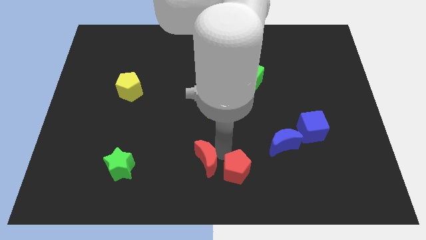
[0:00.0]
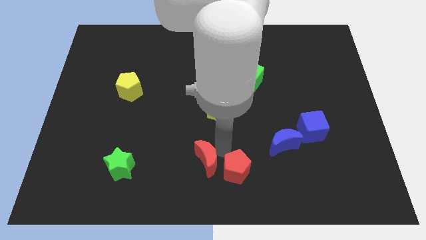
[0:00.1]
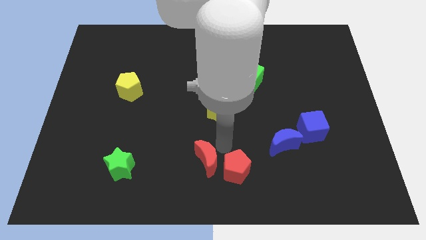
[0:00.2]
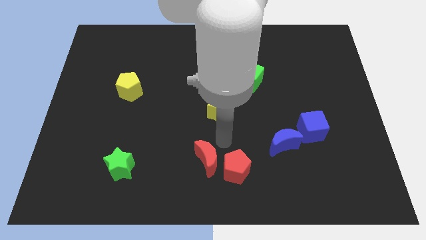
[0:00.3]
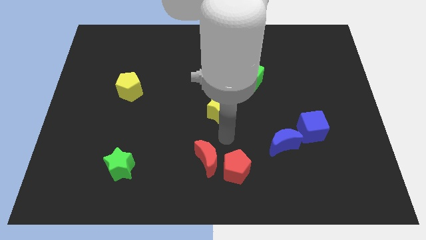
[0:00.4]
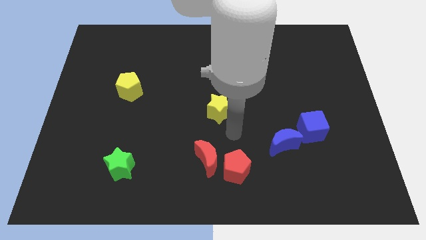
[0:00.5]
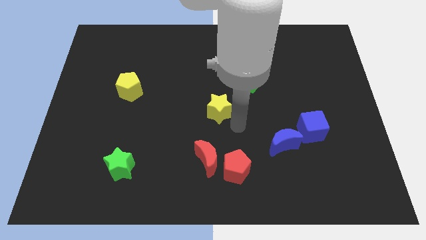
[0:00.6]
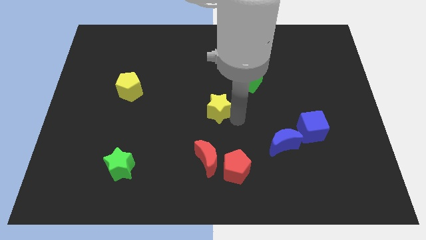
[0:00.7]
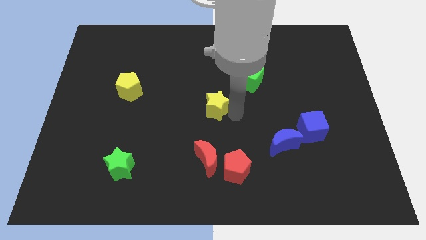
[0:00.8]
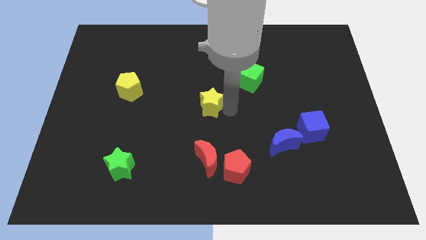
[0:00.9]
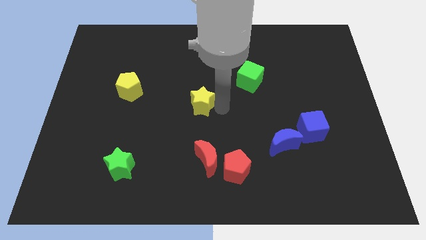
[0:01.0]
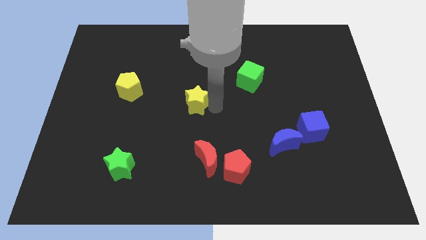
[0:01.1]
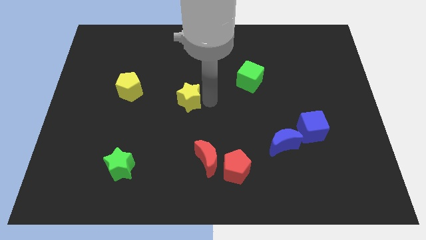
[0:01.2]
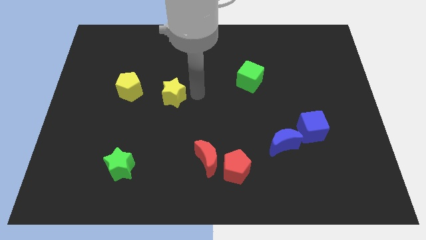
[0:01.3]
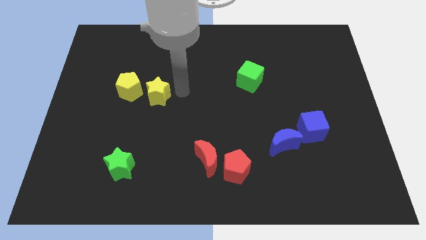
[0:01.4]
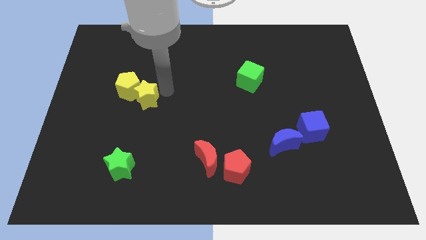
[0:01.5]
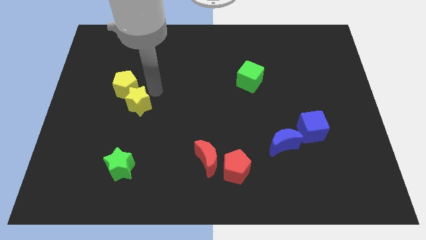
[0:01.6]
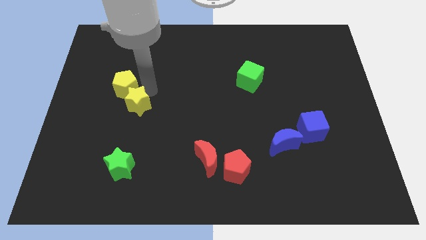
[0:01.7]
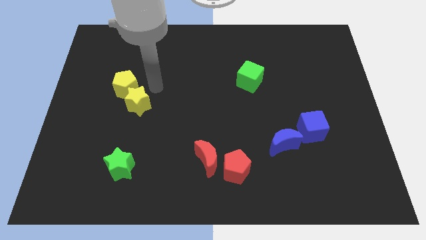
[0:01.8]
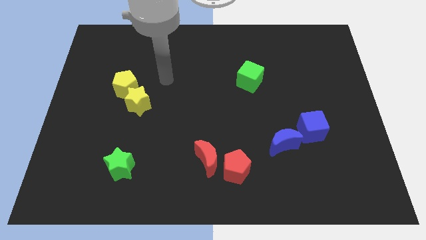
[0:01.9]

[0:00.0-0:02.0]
push the yellow star into the yellow pentagon

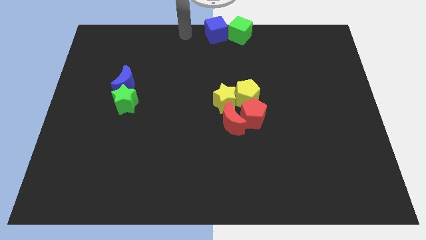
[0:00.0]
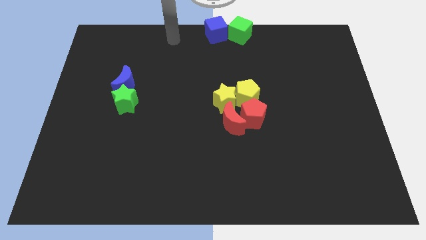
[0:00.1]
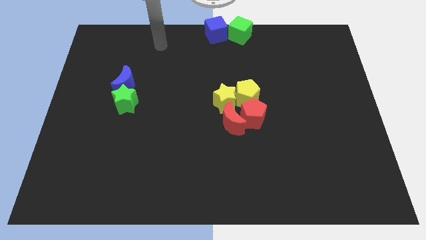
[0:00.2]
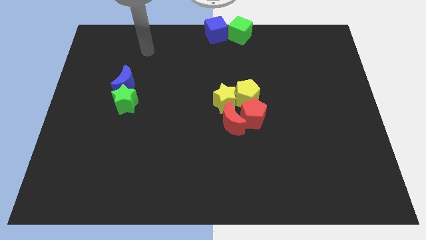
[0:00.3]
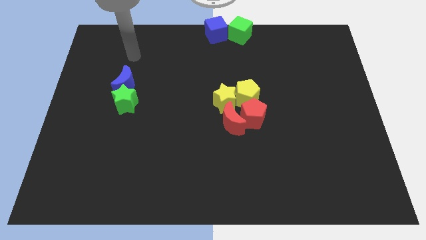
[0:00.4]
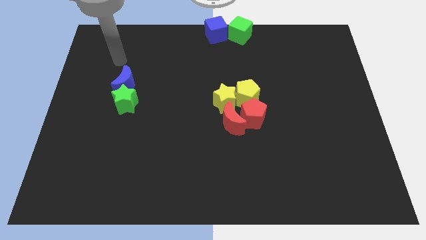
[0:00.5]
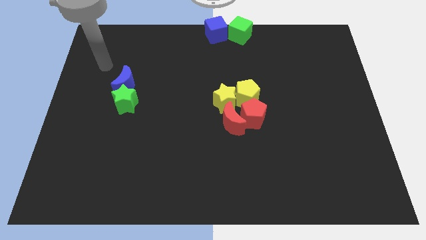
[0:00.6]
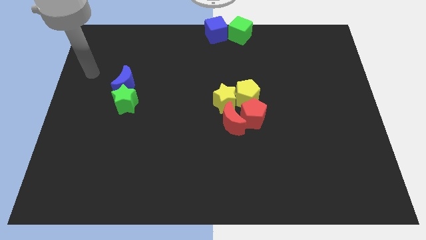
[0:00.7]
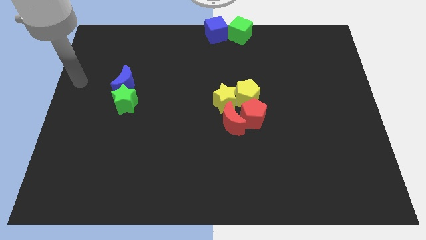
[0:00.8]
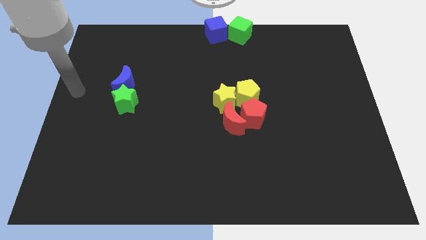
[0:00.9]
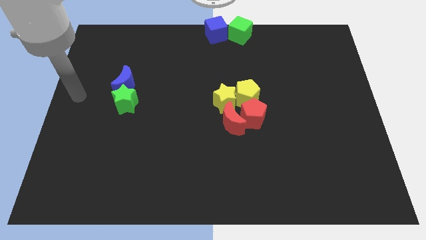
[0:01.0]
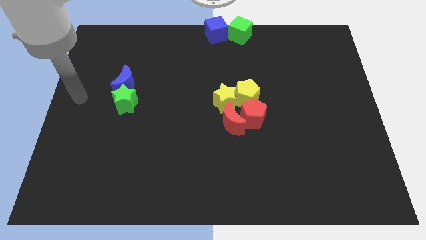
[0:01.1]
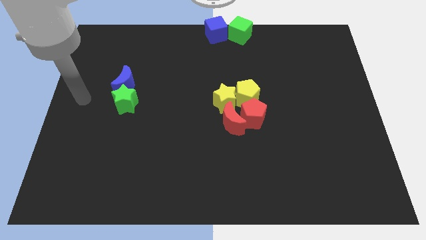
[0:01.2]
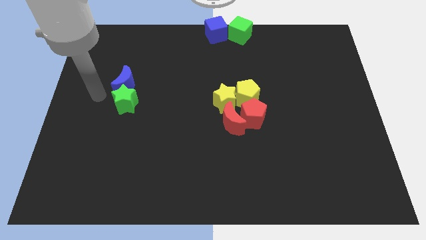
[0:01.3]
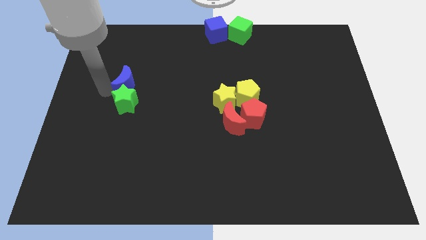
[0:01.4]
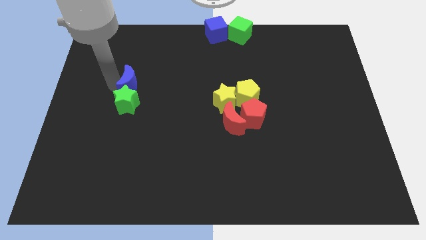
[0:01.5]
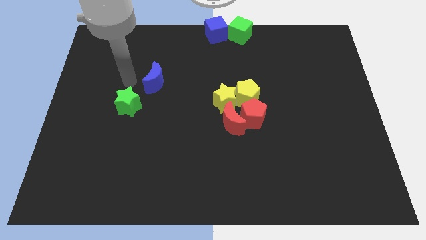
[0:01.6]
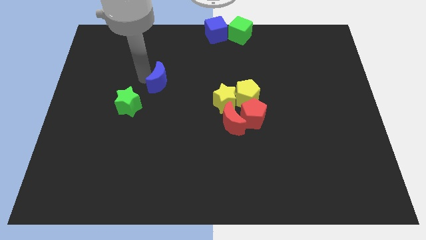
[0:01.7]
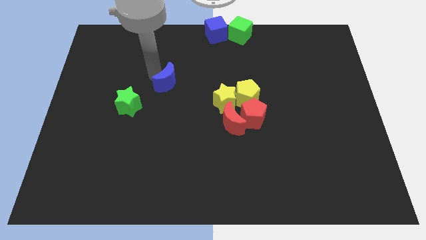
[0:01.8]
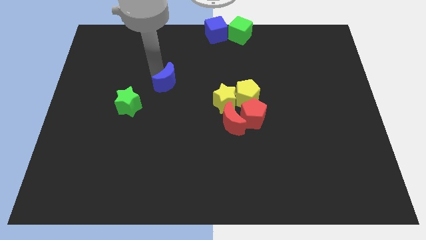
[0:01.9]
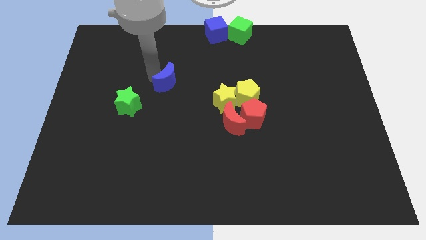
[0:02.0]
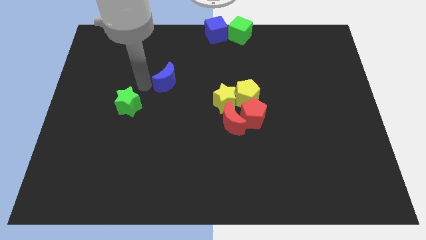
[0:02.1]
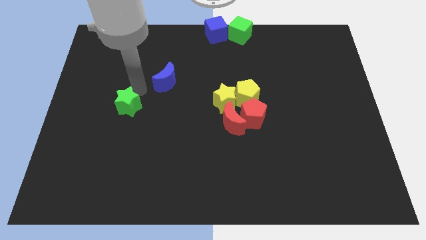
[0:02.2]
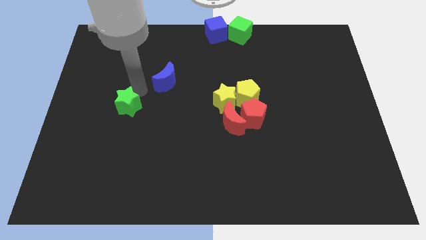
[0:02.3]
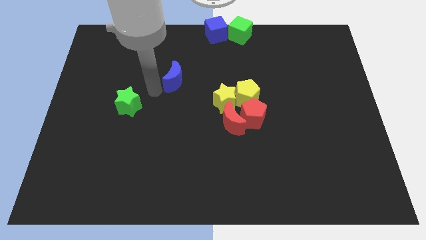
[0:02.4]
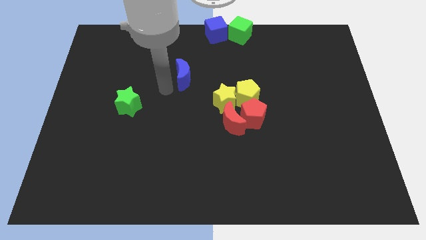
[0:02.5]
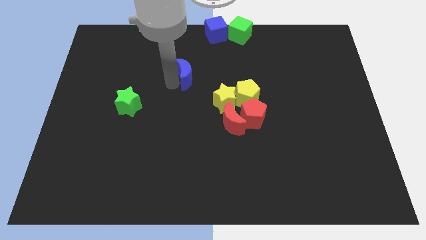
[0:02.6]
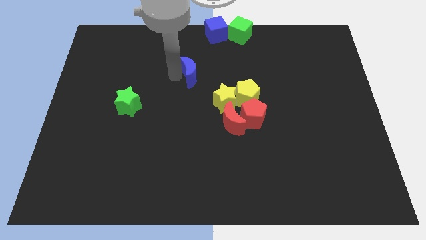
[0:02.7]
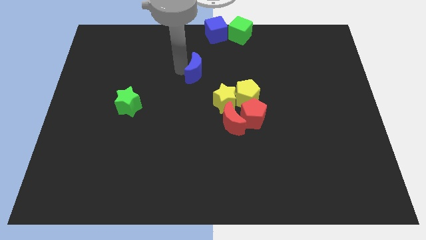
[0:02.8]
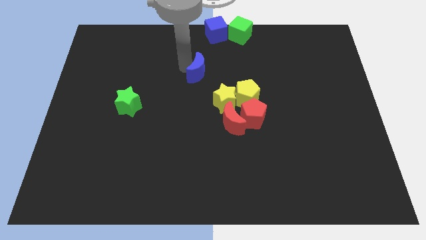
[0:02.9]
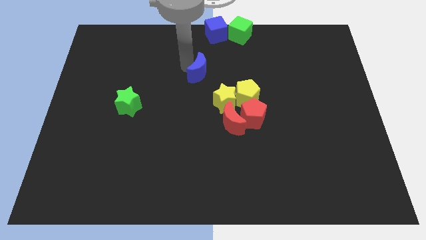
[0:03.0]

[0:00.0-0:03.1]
separate the blue crescent from the top side of the green star

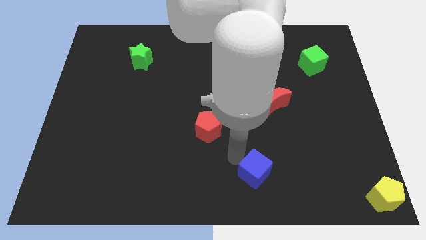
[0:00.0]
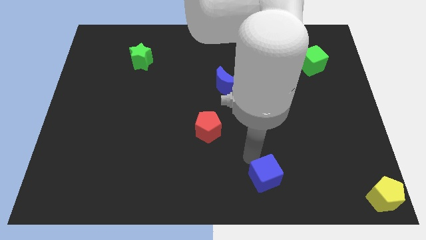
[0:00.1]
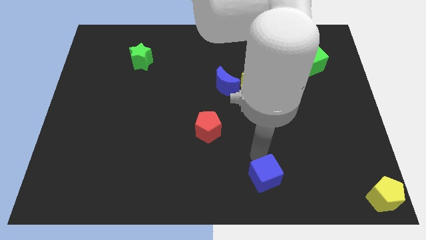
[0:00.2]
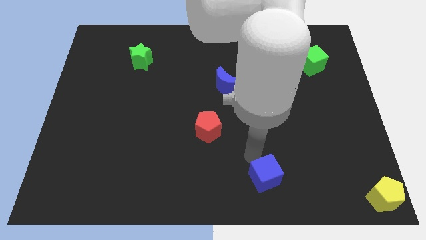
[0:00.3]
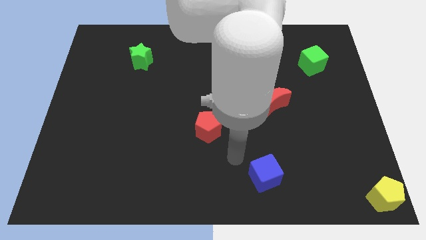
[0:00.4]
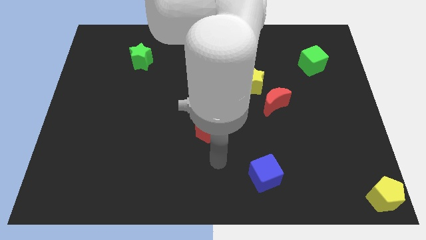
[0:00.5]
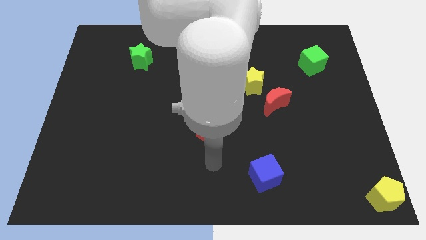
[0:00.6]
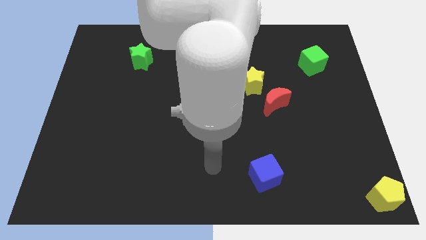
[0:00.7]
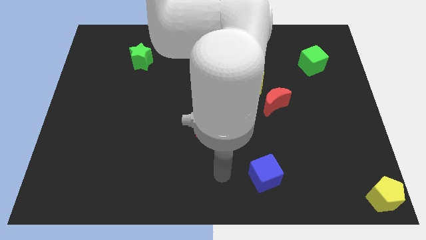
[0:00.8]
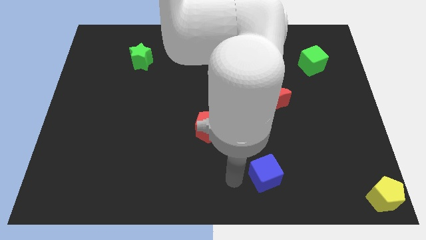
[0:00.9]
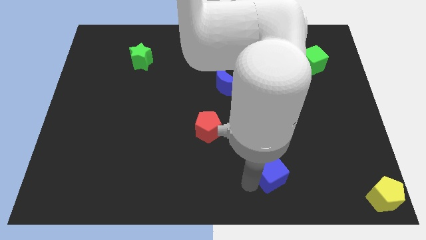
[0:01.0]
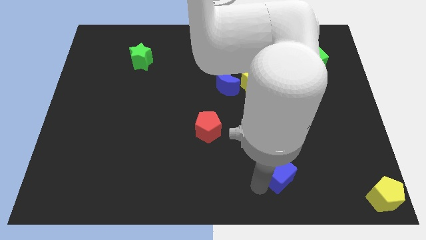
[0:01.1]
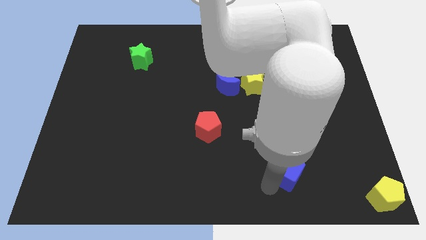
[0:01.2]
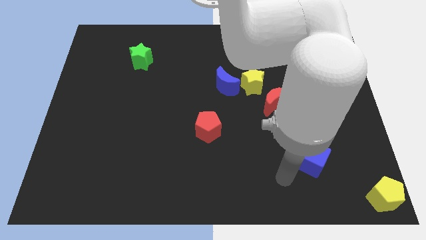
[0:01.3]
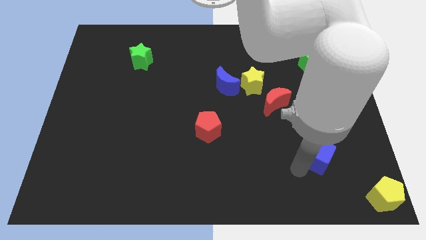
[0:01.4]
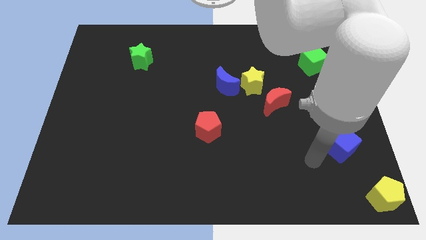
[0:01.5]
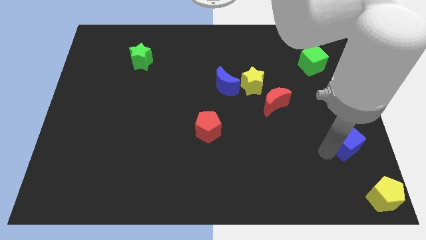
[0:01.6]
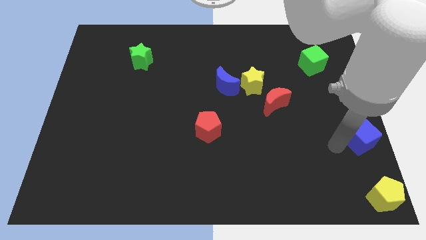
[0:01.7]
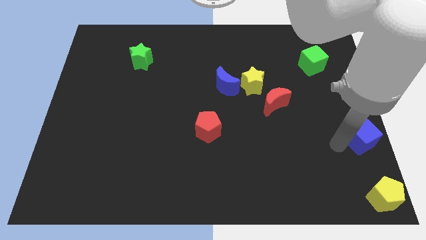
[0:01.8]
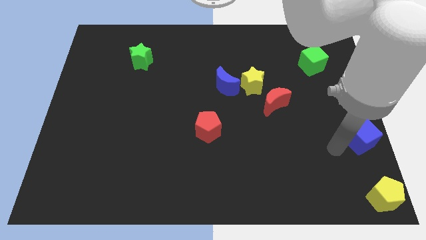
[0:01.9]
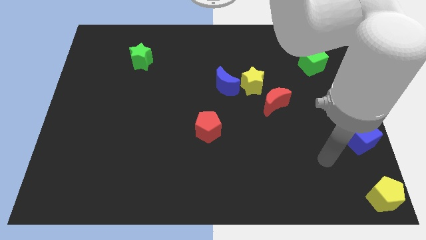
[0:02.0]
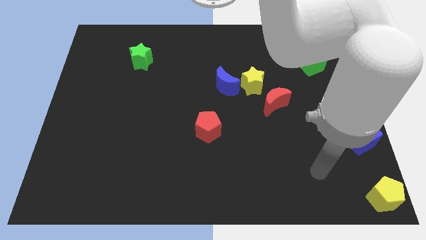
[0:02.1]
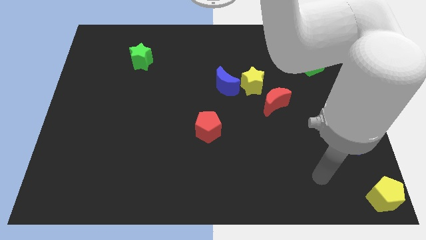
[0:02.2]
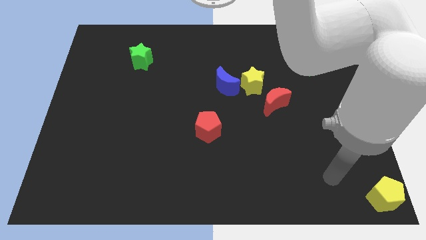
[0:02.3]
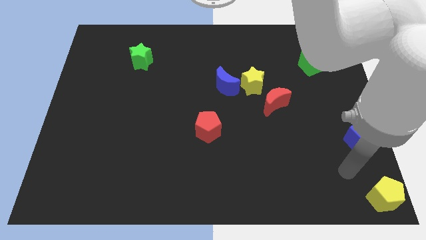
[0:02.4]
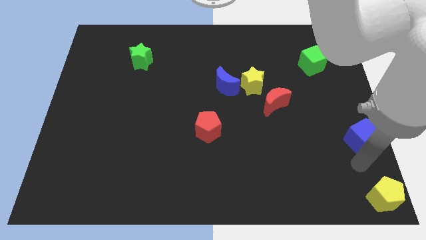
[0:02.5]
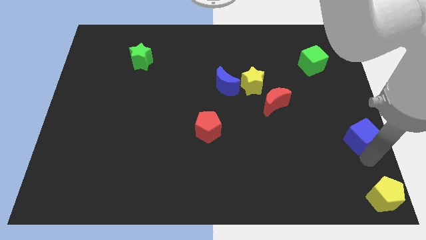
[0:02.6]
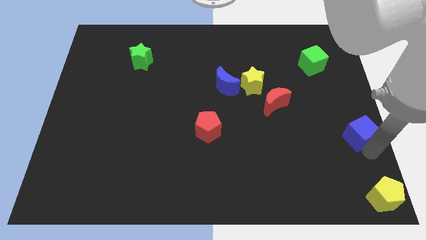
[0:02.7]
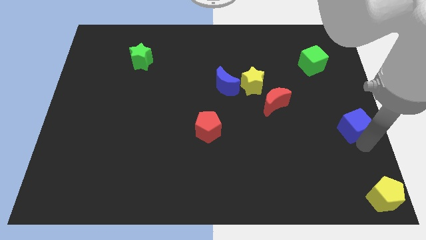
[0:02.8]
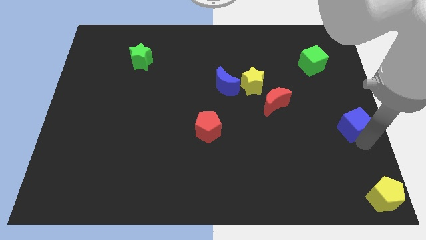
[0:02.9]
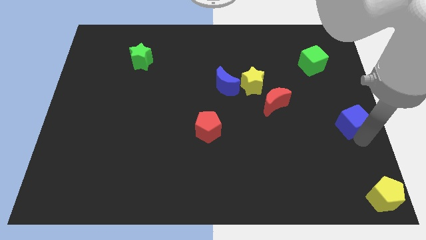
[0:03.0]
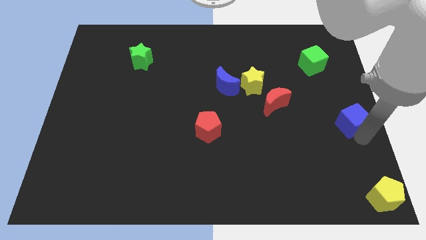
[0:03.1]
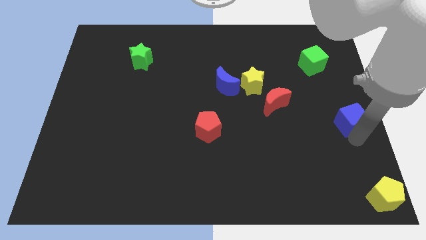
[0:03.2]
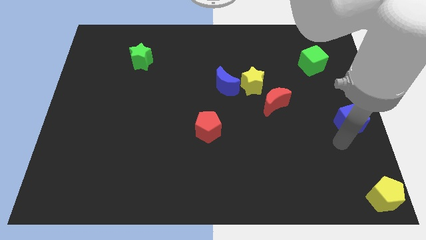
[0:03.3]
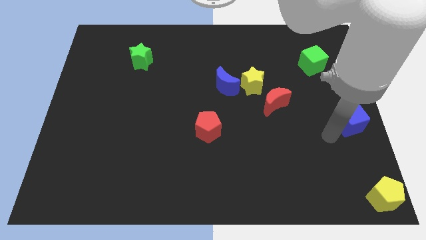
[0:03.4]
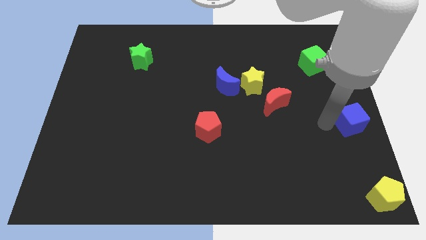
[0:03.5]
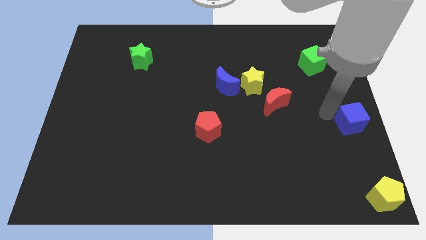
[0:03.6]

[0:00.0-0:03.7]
push the blue cube to the right center of the board

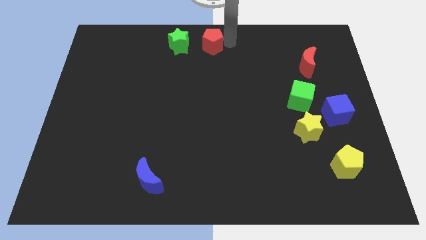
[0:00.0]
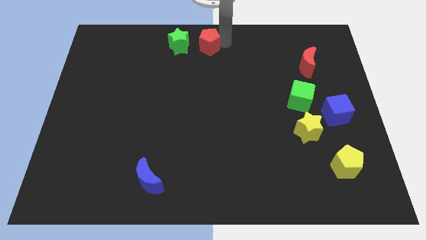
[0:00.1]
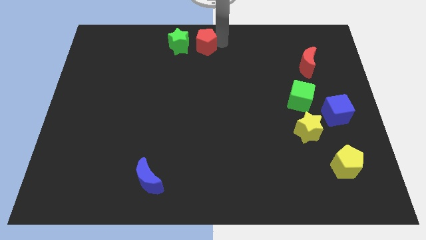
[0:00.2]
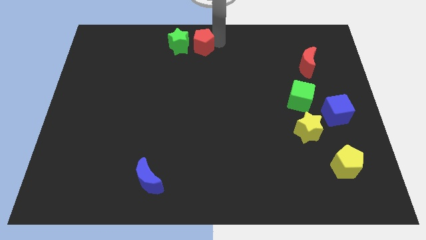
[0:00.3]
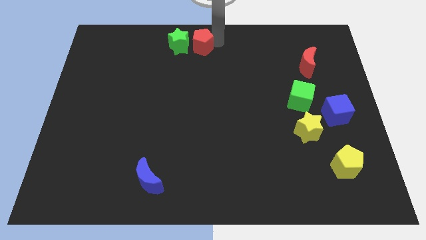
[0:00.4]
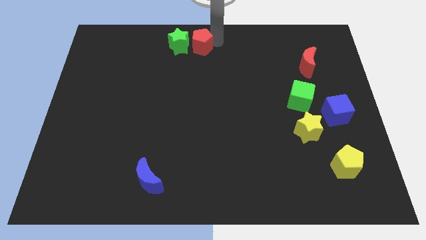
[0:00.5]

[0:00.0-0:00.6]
push the red pentagon right to the green star
